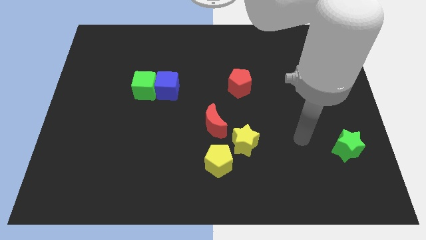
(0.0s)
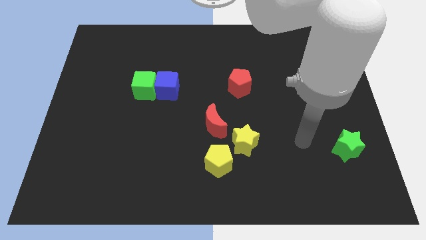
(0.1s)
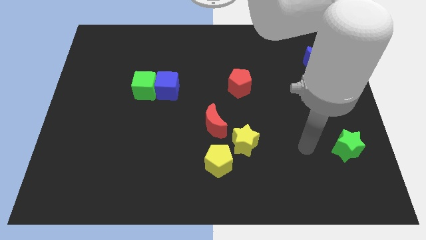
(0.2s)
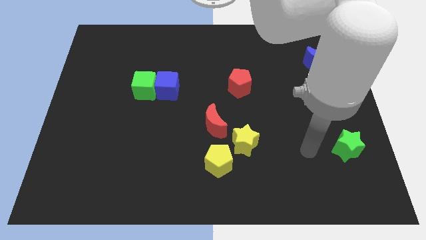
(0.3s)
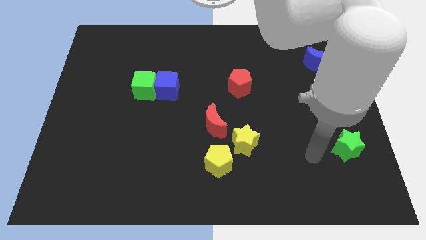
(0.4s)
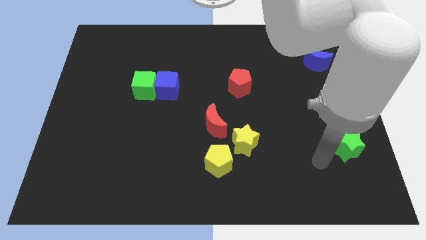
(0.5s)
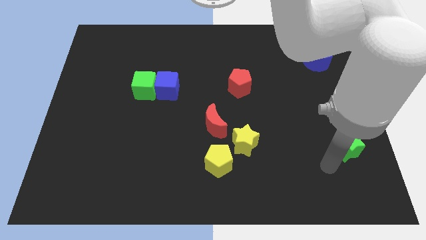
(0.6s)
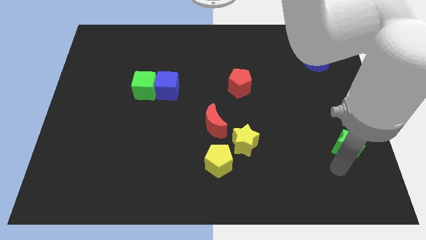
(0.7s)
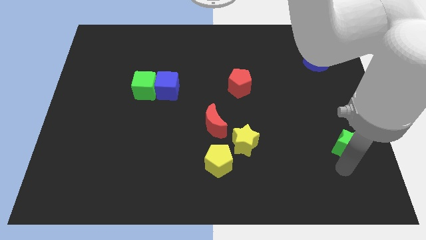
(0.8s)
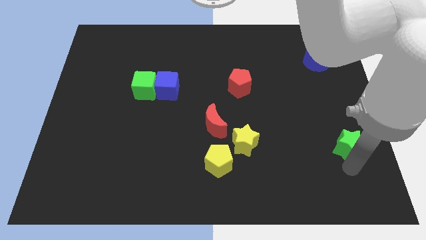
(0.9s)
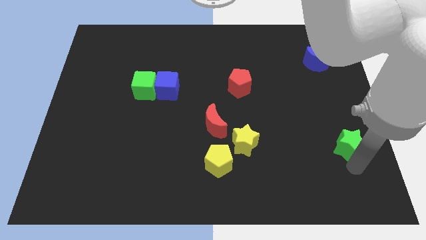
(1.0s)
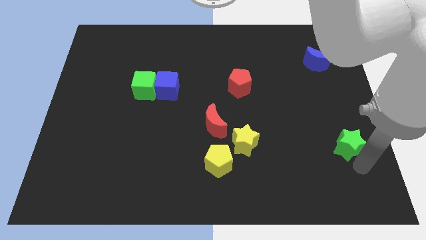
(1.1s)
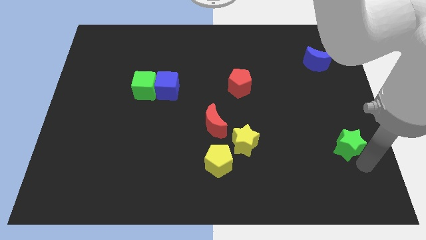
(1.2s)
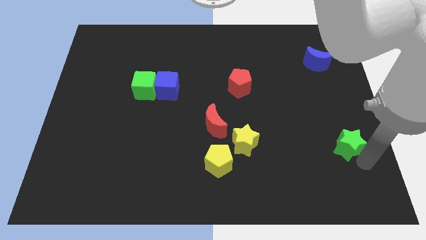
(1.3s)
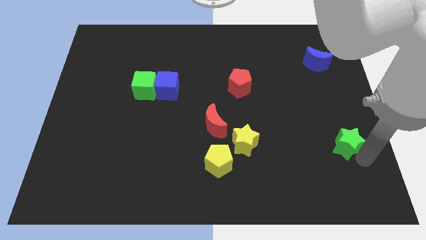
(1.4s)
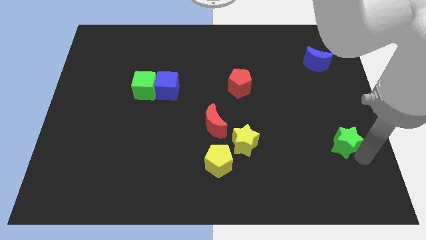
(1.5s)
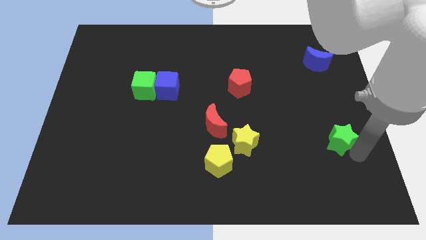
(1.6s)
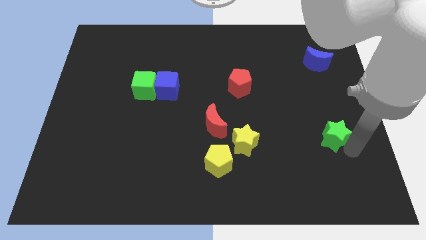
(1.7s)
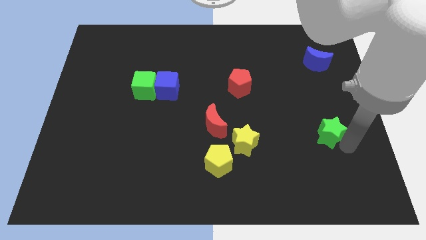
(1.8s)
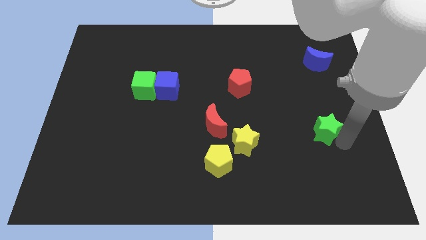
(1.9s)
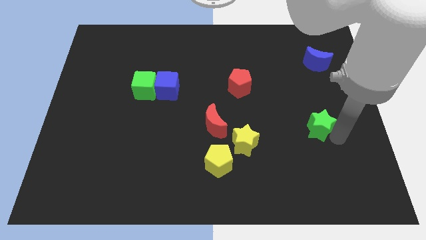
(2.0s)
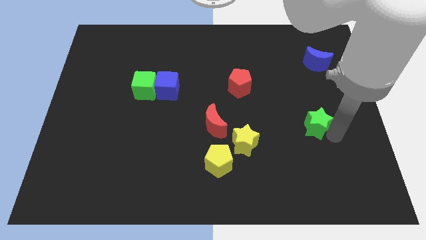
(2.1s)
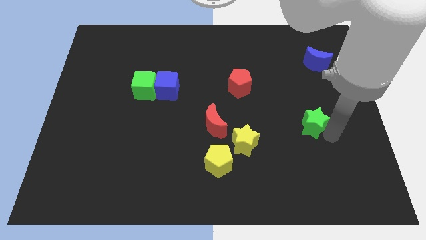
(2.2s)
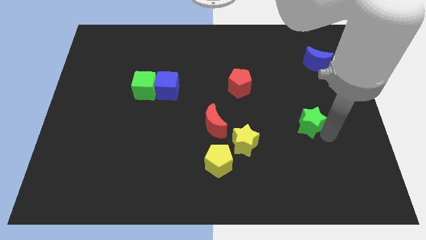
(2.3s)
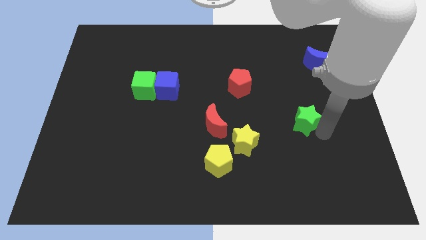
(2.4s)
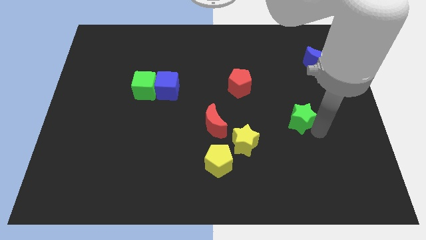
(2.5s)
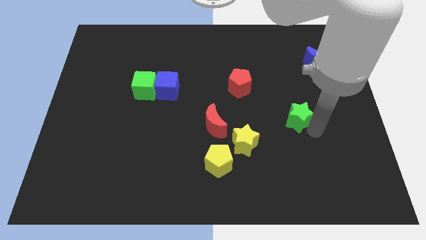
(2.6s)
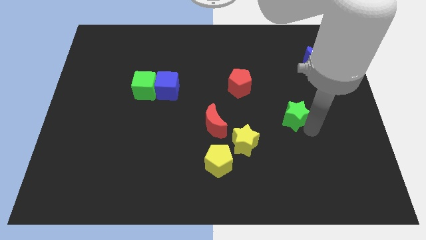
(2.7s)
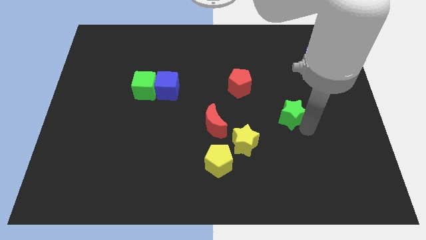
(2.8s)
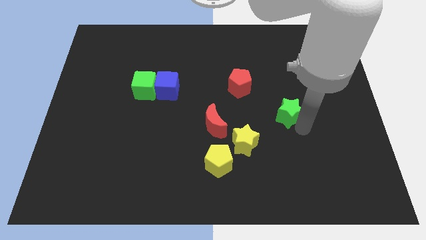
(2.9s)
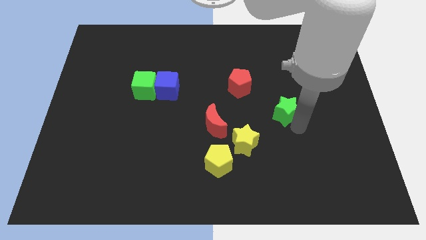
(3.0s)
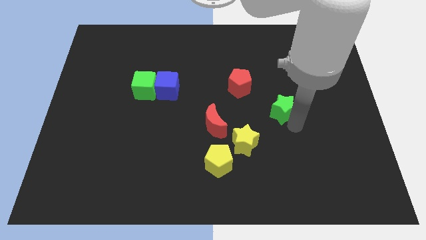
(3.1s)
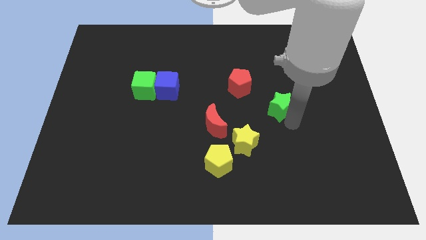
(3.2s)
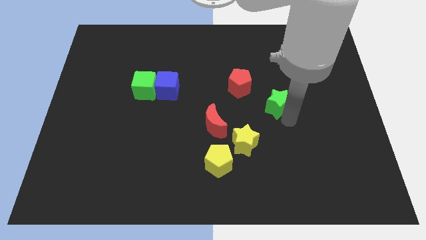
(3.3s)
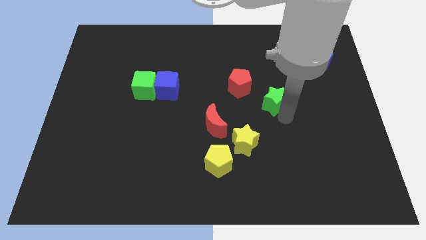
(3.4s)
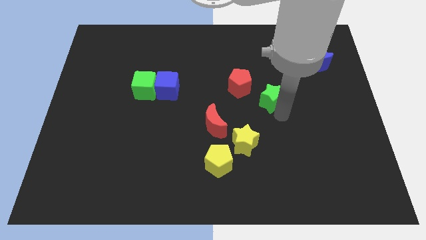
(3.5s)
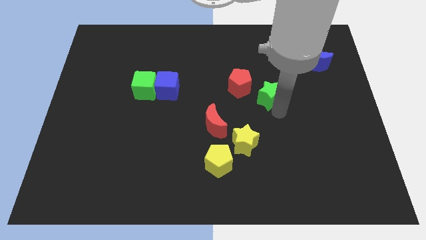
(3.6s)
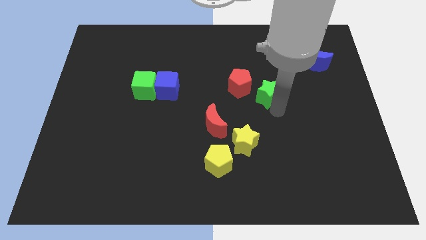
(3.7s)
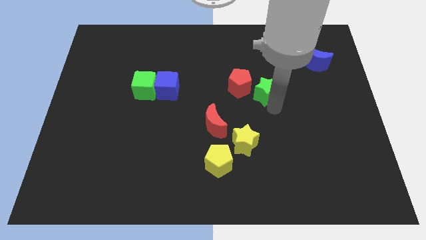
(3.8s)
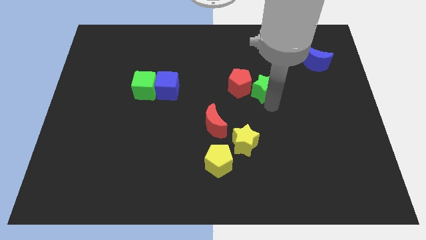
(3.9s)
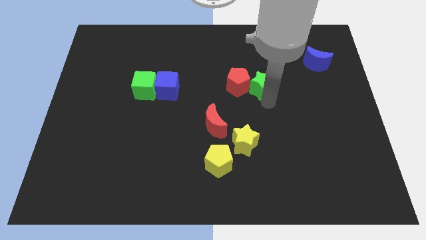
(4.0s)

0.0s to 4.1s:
put the green star next to the red pentagon

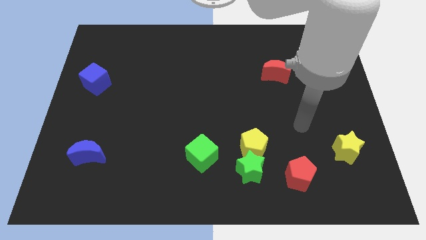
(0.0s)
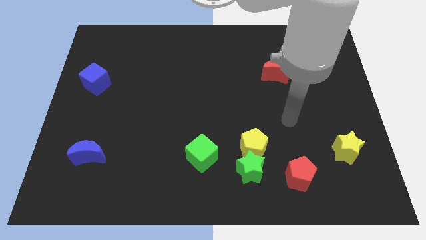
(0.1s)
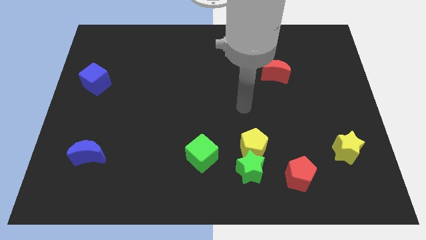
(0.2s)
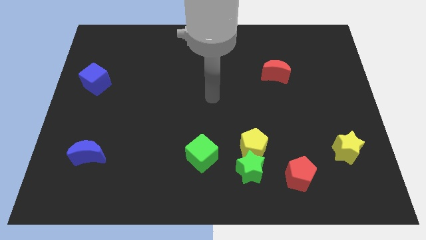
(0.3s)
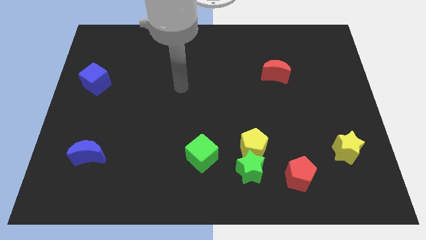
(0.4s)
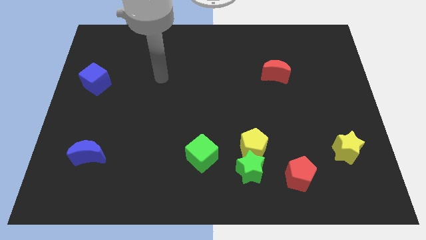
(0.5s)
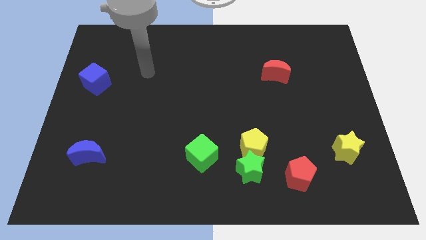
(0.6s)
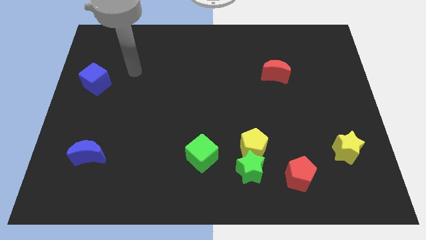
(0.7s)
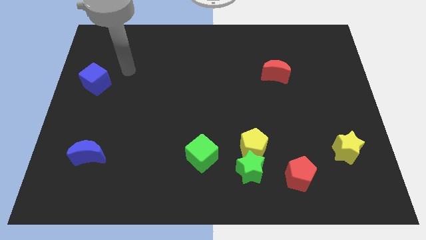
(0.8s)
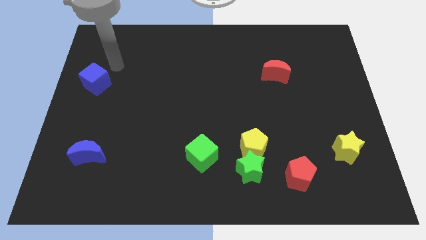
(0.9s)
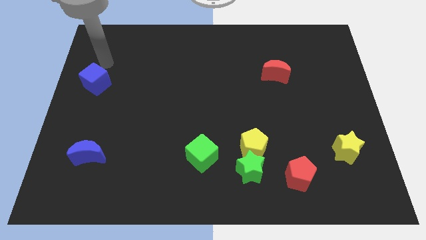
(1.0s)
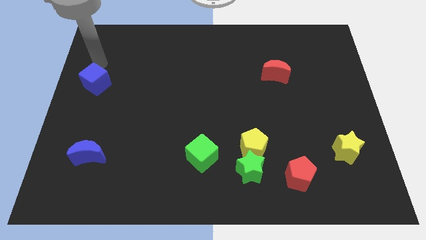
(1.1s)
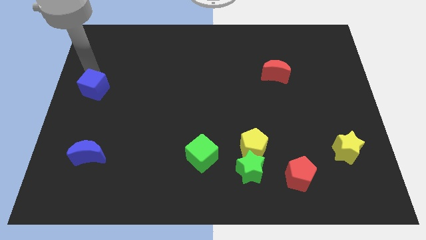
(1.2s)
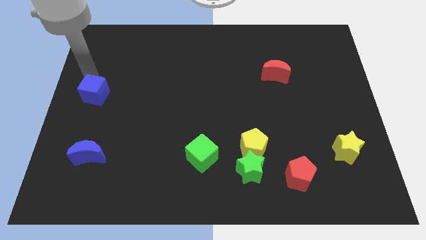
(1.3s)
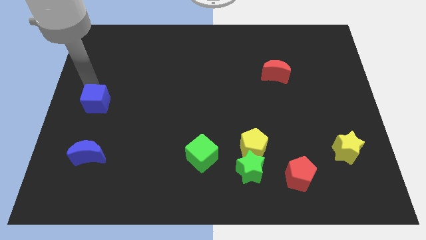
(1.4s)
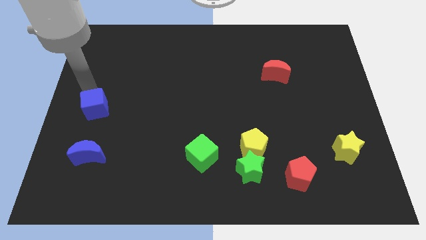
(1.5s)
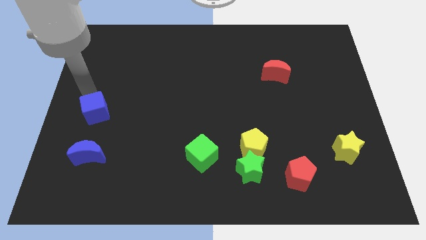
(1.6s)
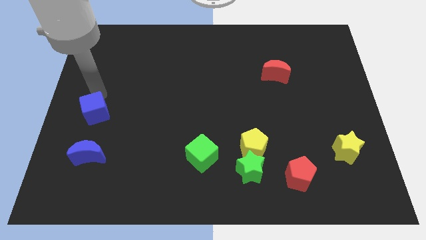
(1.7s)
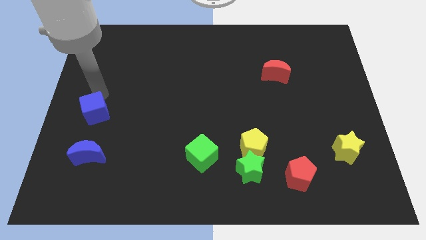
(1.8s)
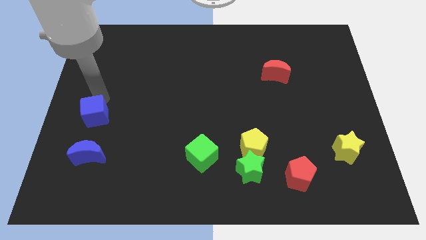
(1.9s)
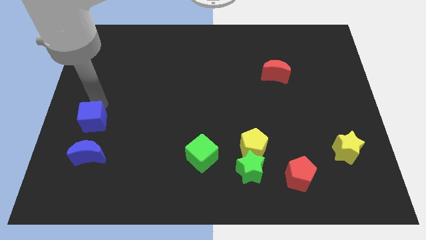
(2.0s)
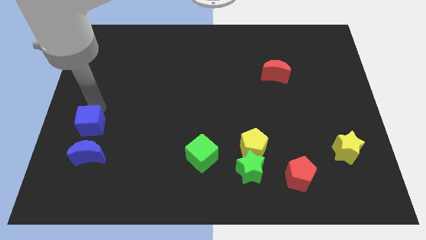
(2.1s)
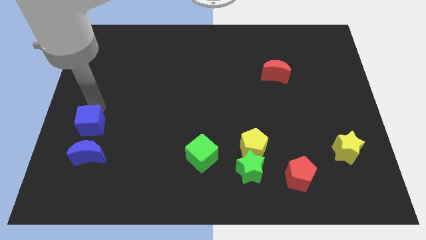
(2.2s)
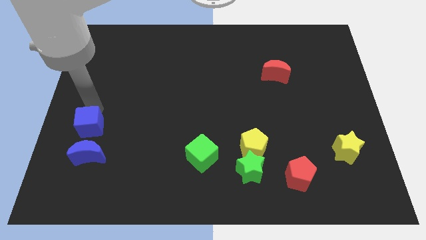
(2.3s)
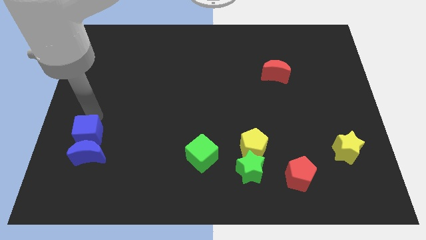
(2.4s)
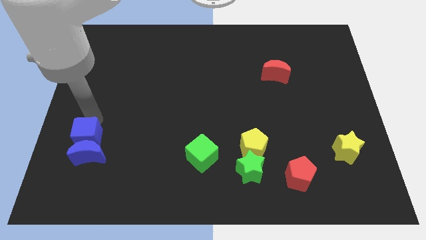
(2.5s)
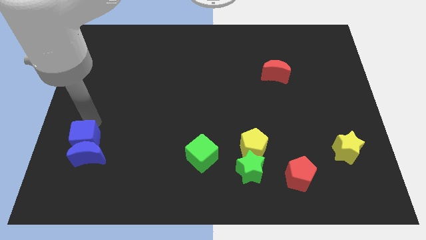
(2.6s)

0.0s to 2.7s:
move the blue cube close to the blue moon

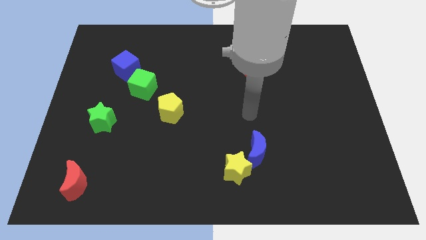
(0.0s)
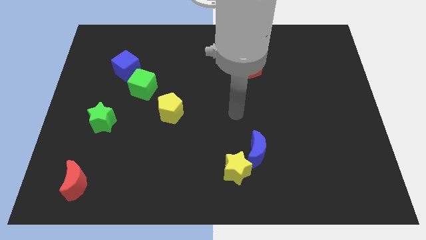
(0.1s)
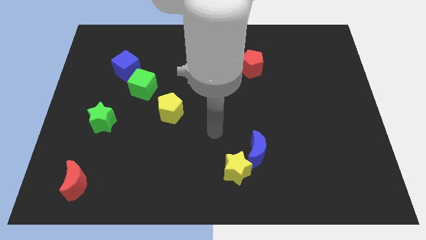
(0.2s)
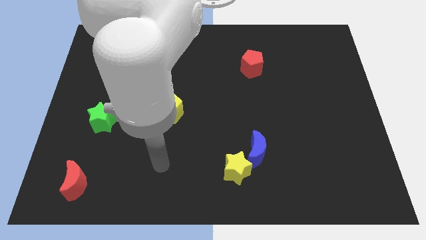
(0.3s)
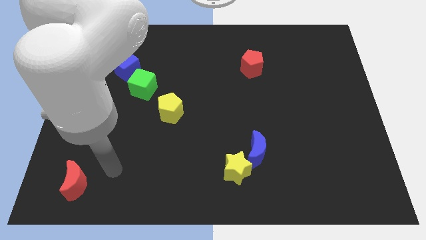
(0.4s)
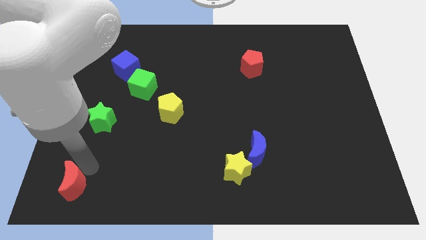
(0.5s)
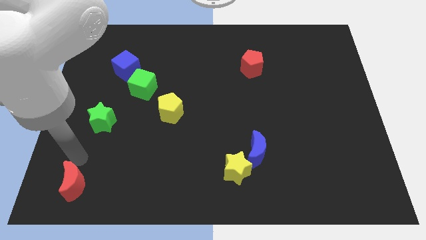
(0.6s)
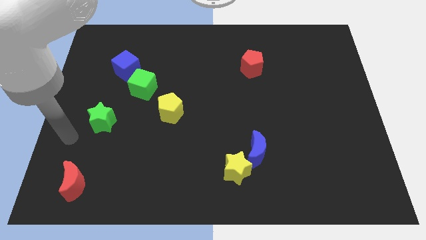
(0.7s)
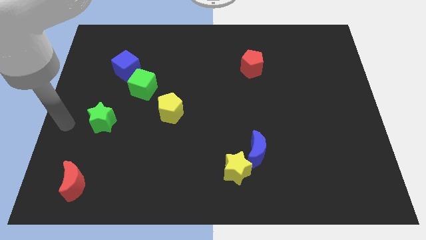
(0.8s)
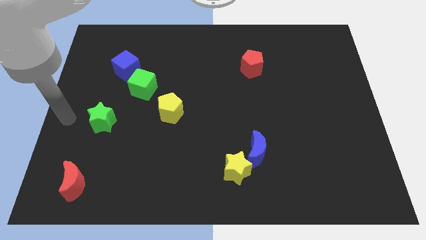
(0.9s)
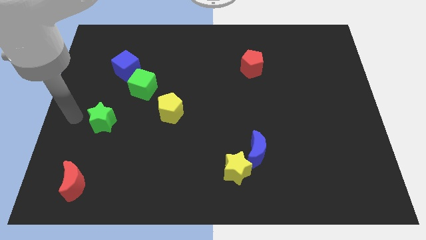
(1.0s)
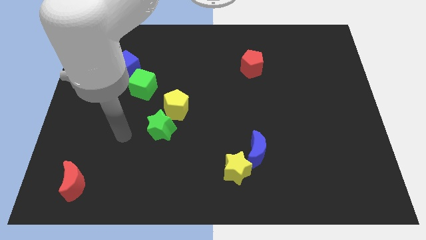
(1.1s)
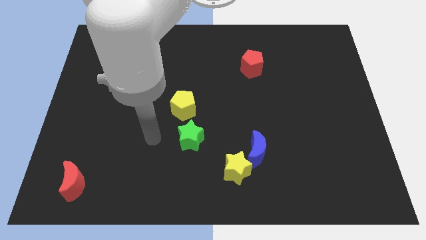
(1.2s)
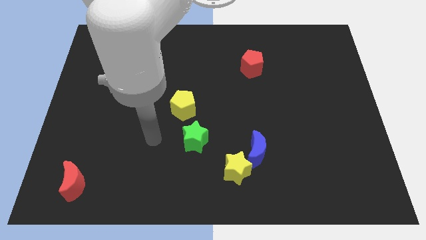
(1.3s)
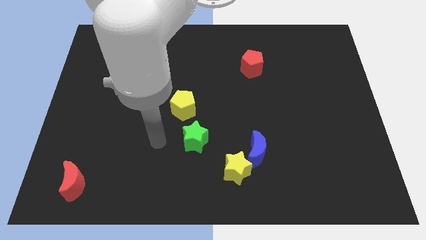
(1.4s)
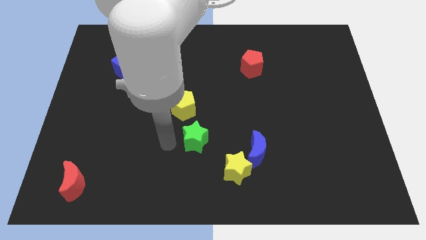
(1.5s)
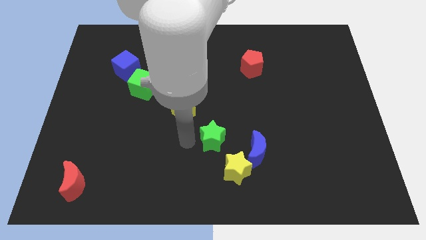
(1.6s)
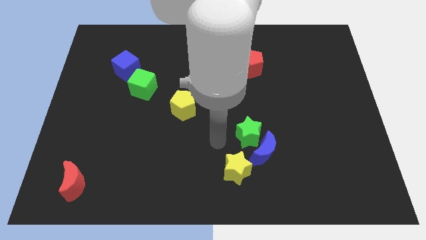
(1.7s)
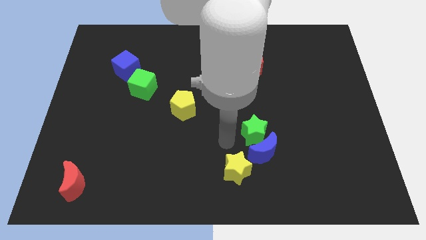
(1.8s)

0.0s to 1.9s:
put the green star towards the blue moon
